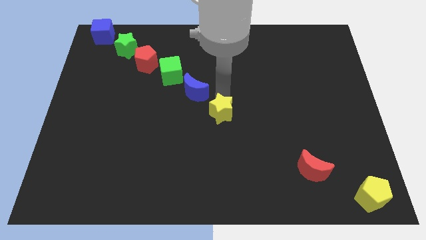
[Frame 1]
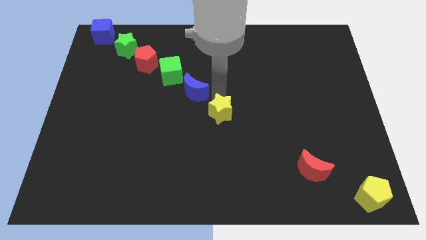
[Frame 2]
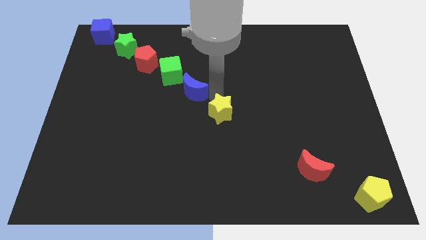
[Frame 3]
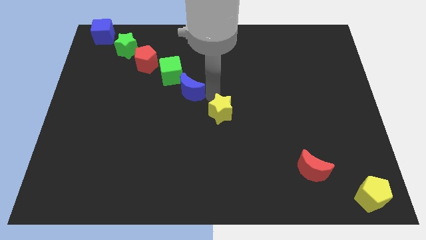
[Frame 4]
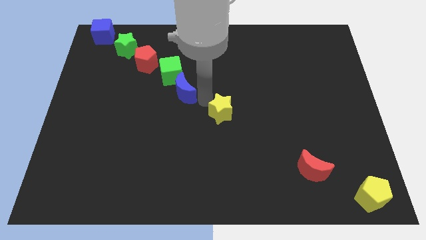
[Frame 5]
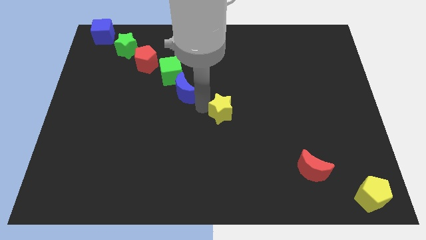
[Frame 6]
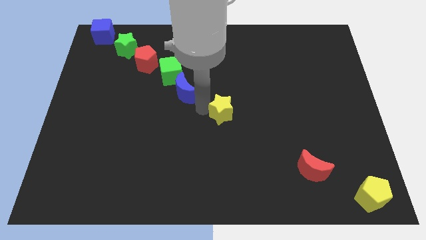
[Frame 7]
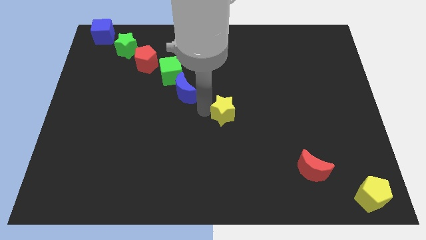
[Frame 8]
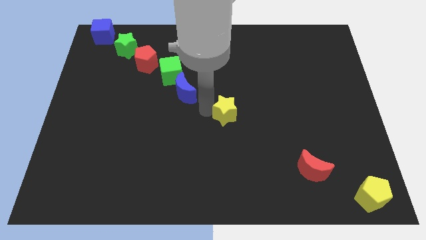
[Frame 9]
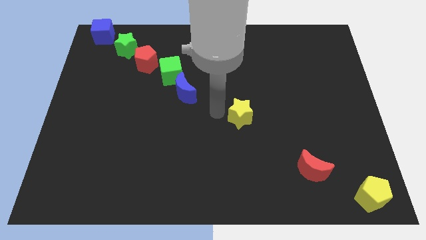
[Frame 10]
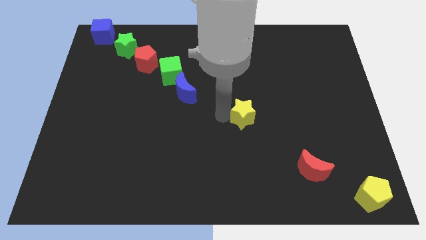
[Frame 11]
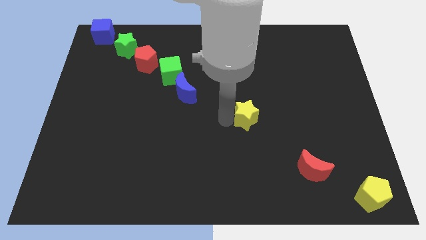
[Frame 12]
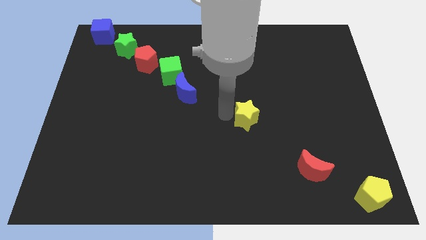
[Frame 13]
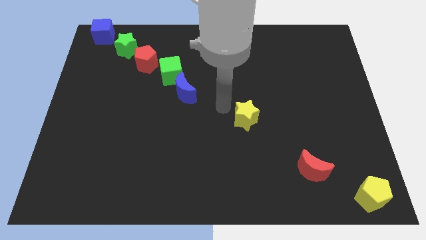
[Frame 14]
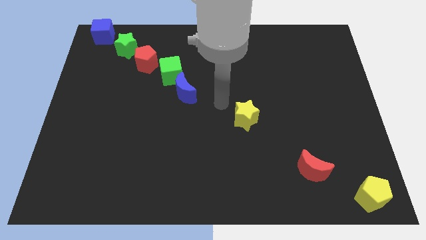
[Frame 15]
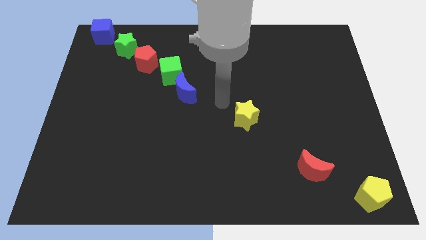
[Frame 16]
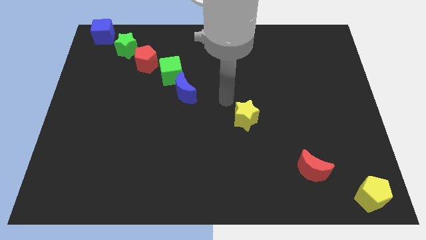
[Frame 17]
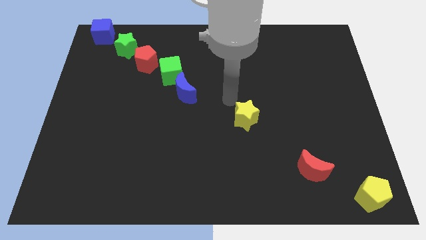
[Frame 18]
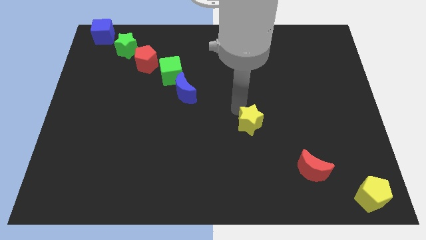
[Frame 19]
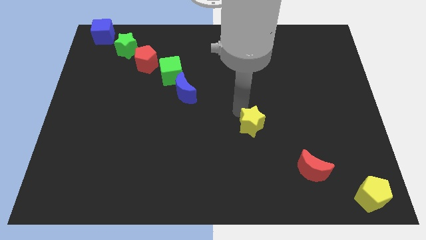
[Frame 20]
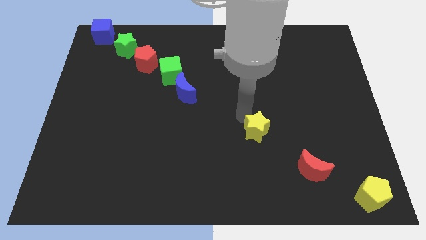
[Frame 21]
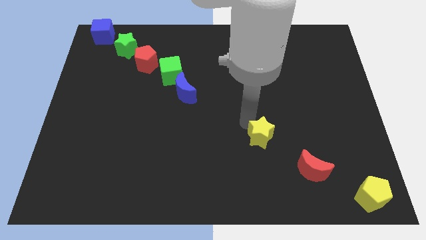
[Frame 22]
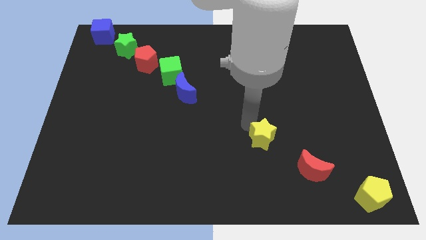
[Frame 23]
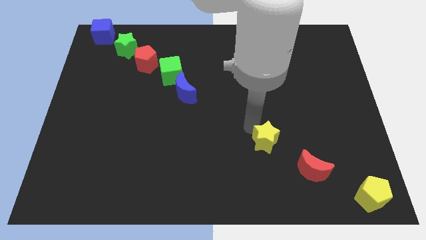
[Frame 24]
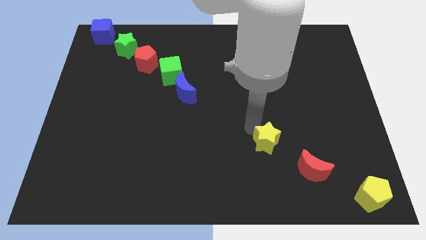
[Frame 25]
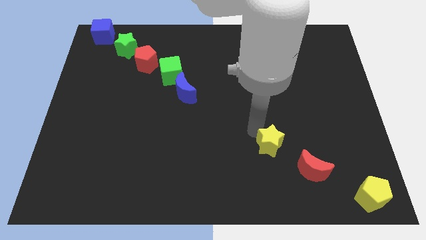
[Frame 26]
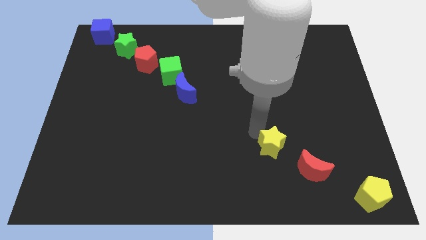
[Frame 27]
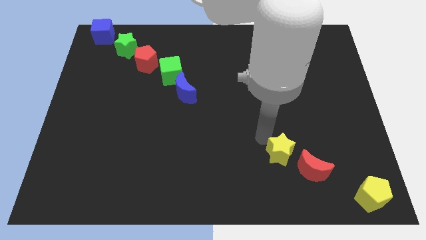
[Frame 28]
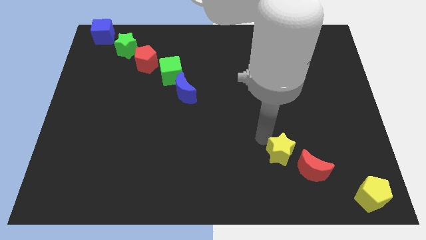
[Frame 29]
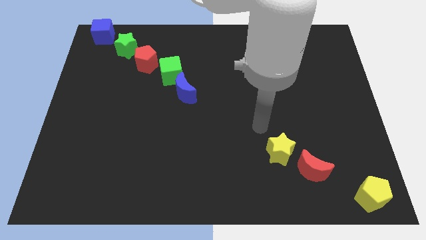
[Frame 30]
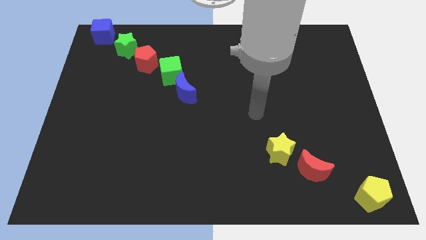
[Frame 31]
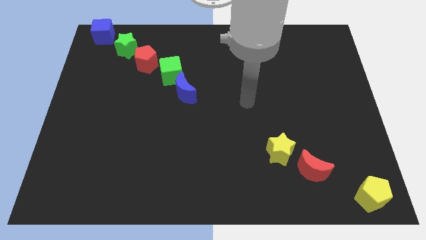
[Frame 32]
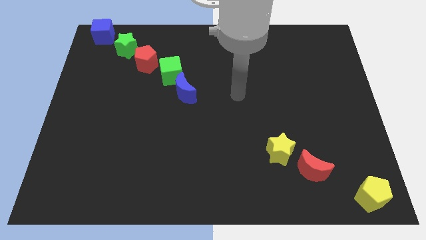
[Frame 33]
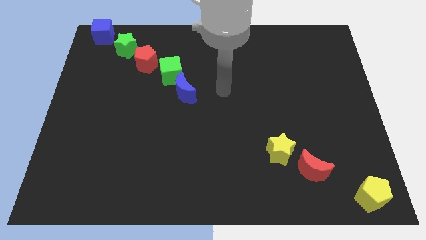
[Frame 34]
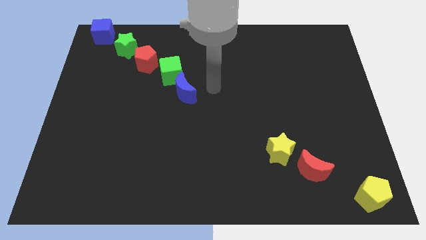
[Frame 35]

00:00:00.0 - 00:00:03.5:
move the yellow star diagonally above the red moon

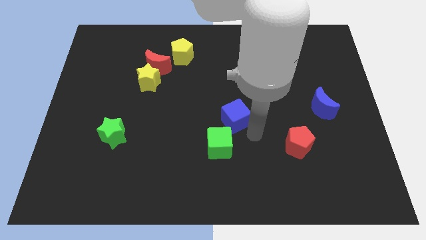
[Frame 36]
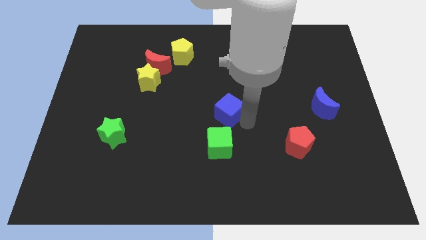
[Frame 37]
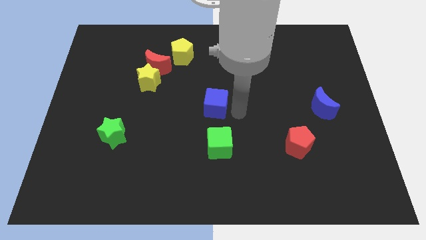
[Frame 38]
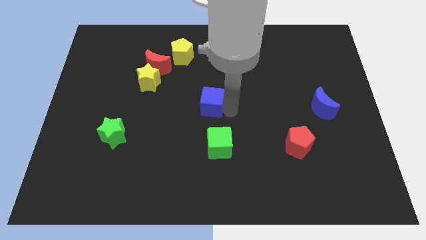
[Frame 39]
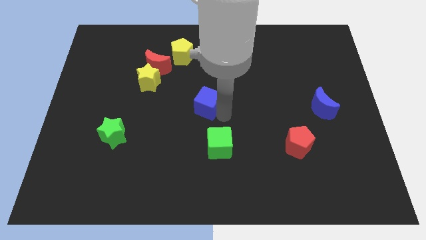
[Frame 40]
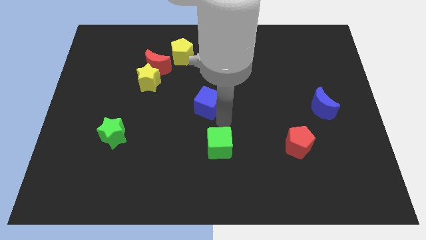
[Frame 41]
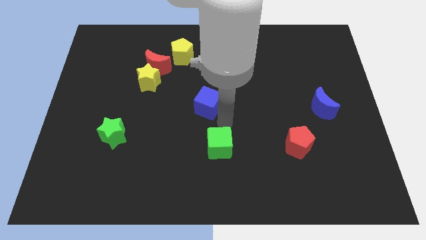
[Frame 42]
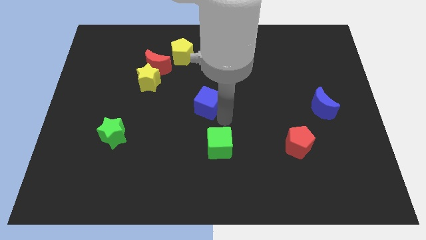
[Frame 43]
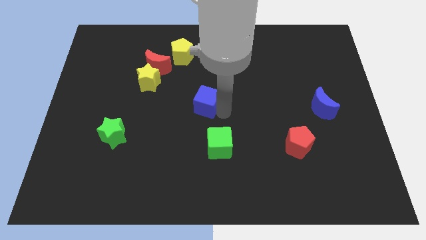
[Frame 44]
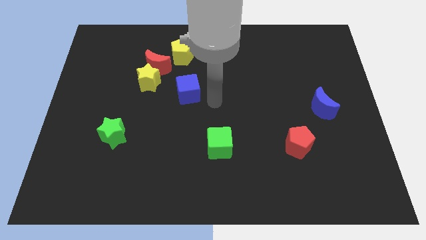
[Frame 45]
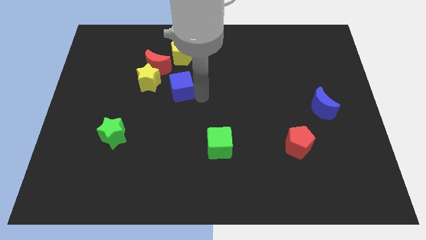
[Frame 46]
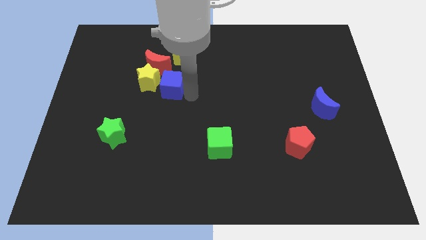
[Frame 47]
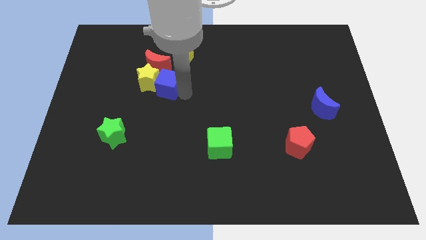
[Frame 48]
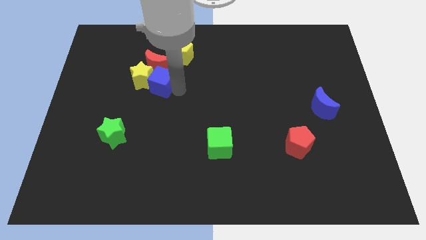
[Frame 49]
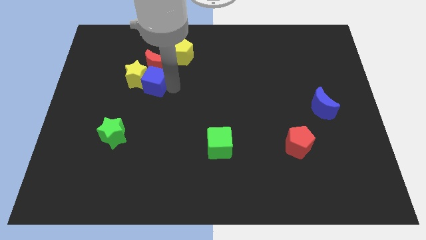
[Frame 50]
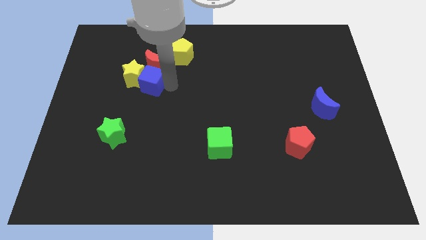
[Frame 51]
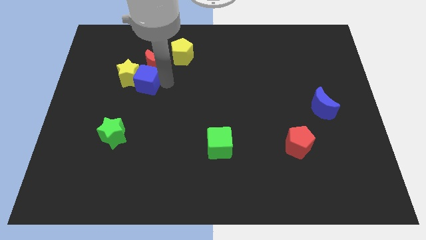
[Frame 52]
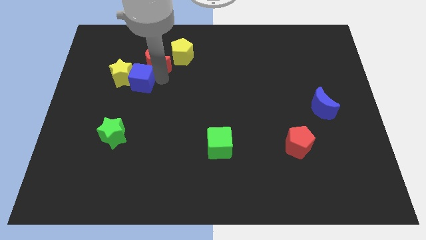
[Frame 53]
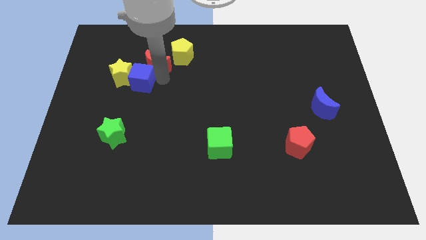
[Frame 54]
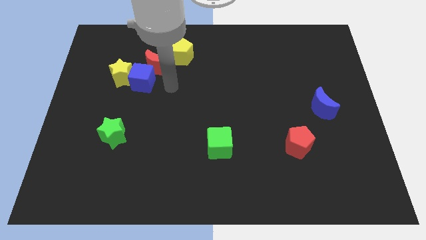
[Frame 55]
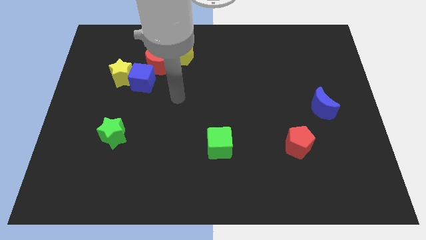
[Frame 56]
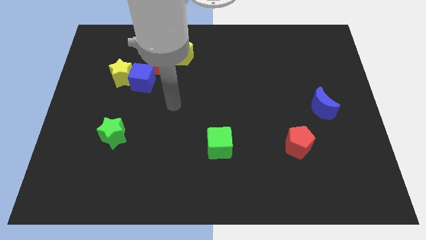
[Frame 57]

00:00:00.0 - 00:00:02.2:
push the blue cube into the yellow star

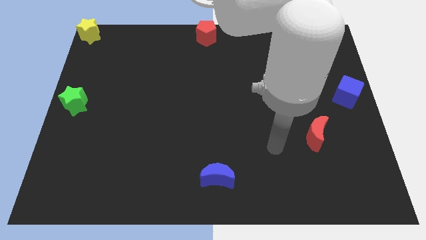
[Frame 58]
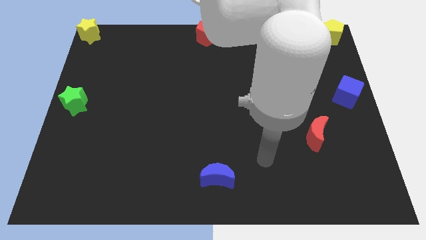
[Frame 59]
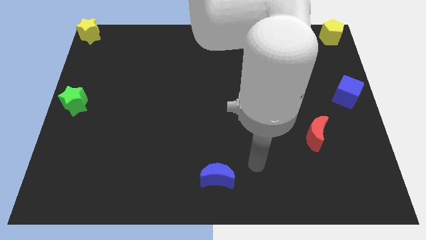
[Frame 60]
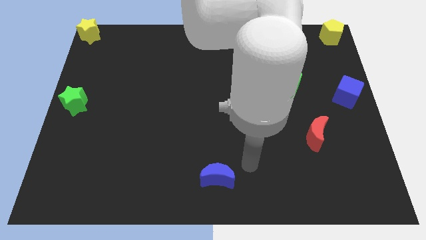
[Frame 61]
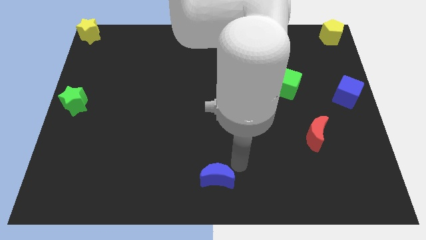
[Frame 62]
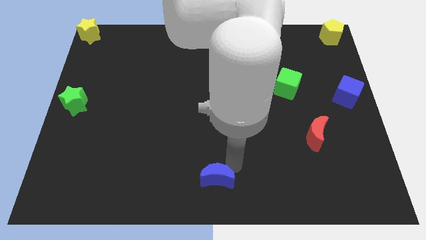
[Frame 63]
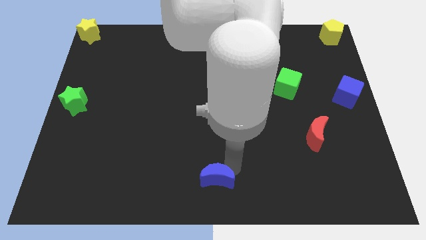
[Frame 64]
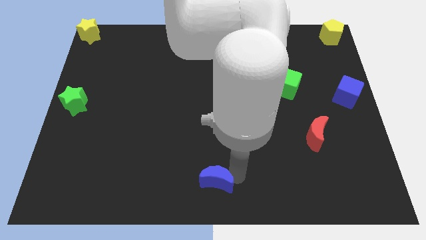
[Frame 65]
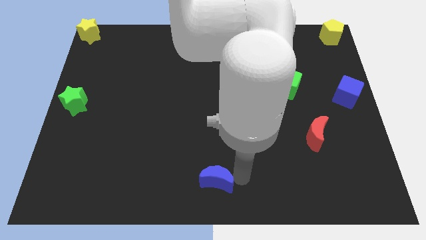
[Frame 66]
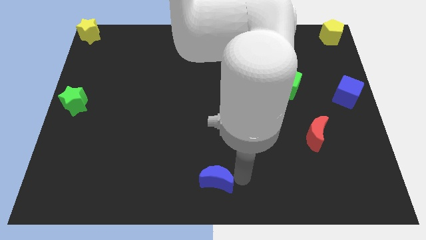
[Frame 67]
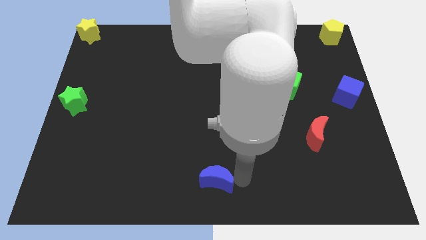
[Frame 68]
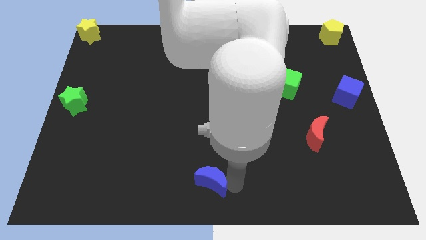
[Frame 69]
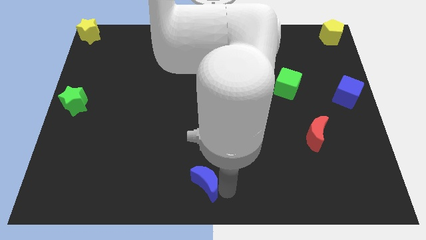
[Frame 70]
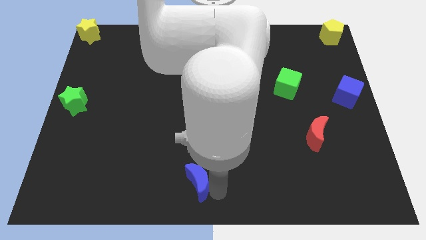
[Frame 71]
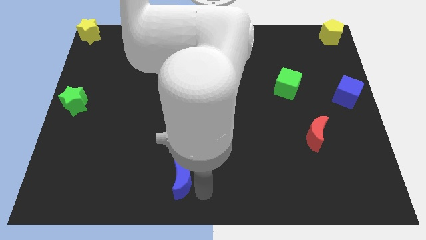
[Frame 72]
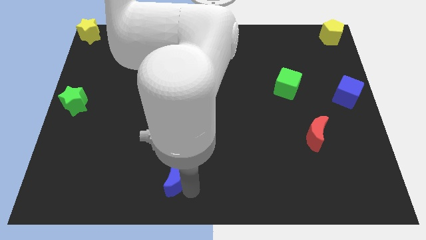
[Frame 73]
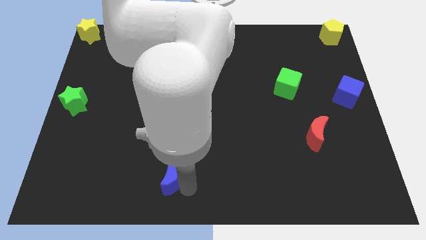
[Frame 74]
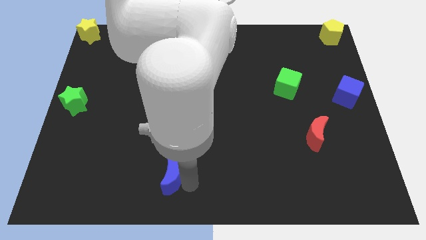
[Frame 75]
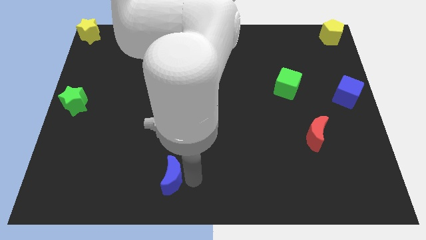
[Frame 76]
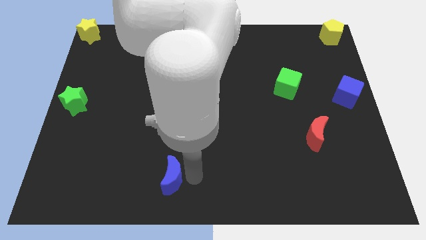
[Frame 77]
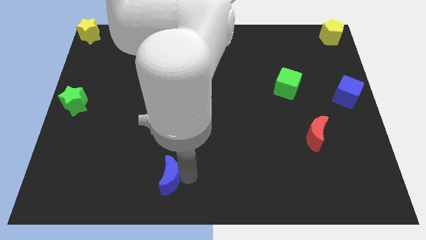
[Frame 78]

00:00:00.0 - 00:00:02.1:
push the blue crescent towards the left side of the board

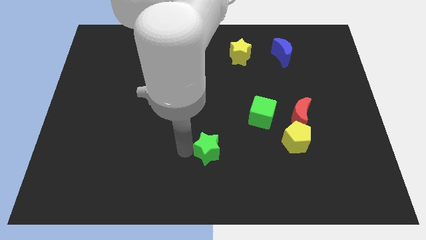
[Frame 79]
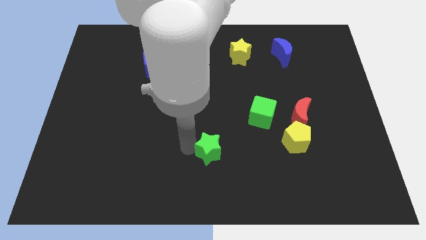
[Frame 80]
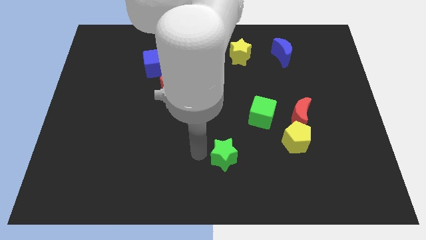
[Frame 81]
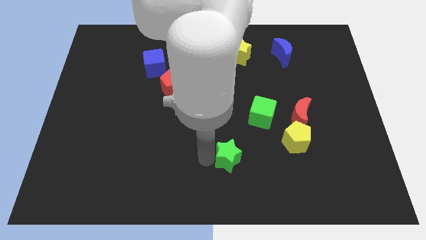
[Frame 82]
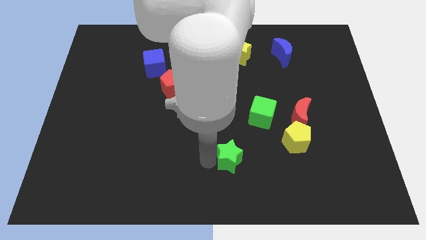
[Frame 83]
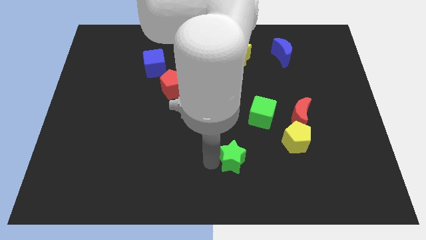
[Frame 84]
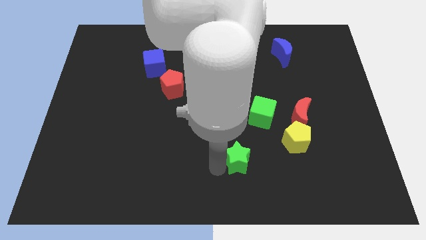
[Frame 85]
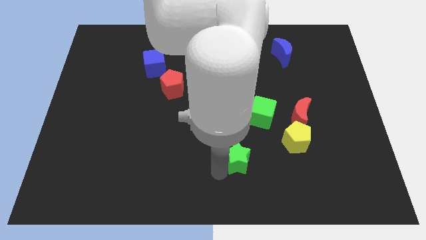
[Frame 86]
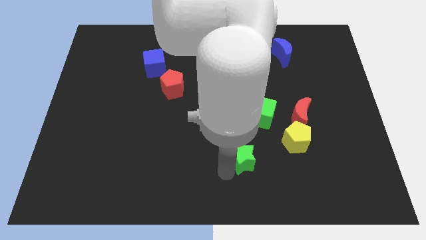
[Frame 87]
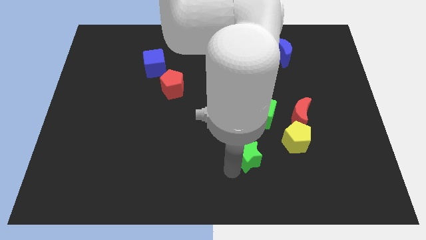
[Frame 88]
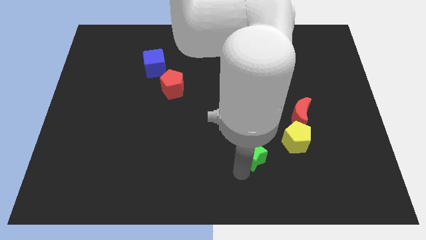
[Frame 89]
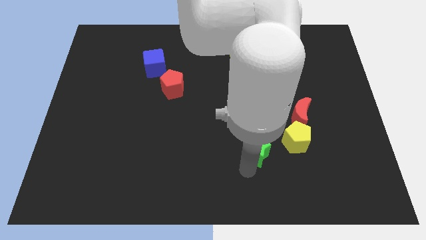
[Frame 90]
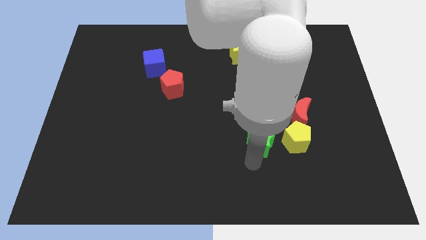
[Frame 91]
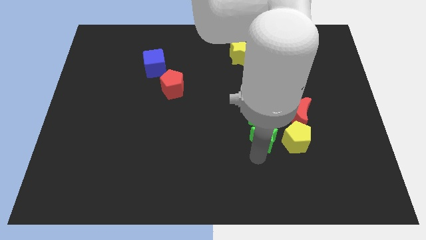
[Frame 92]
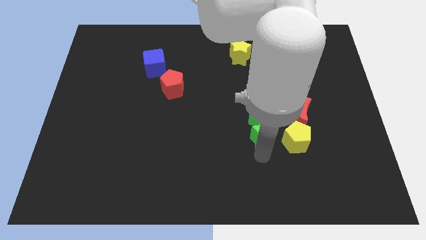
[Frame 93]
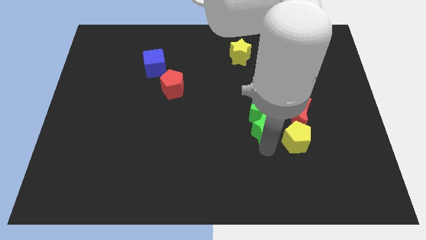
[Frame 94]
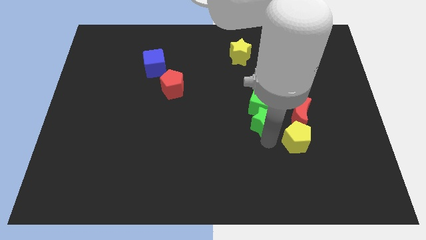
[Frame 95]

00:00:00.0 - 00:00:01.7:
move the green star at the bottom of the green cube
